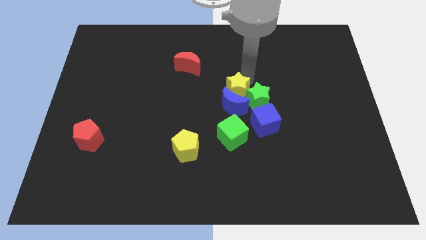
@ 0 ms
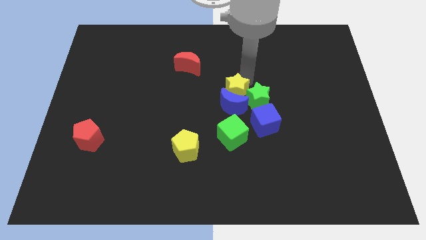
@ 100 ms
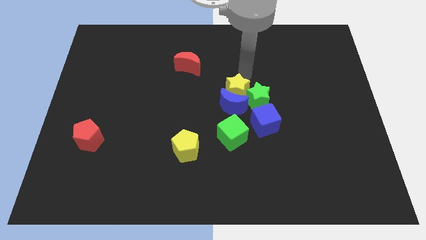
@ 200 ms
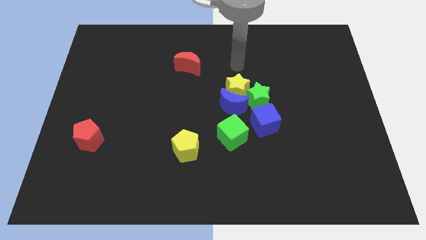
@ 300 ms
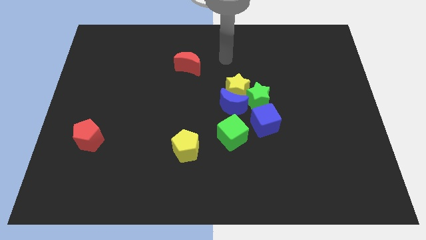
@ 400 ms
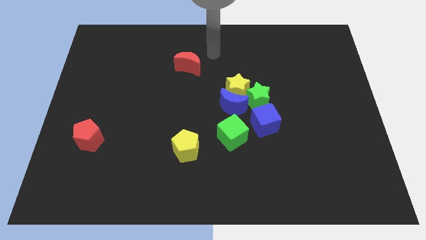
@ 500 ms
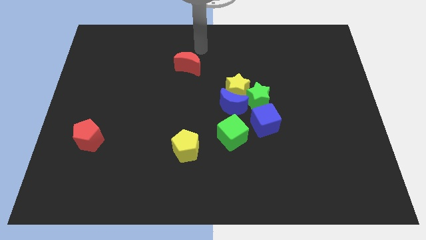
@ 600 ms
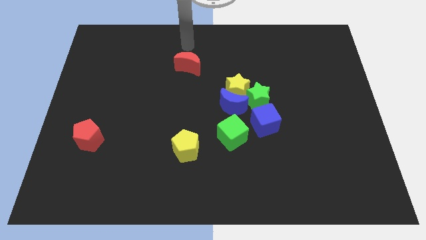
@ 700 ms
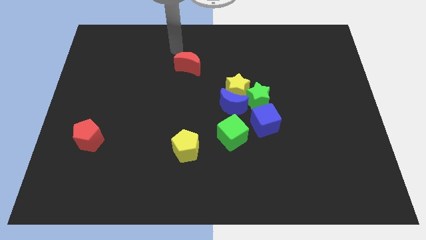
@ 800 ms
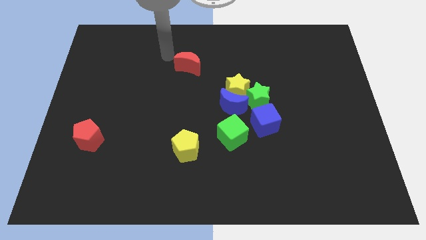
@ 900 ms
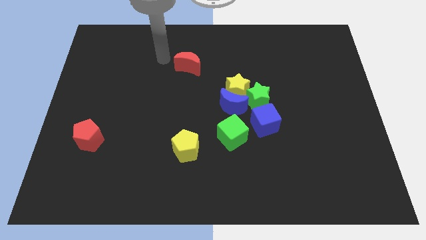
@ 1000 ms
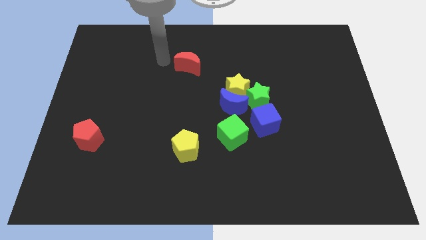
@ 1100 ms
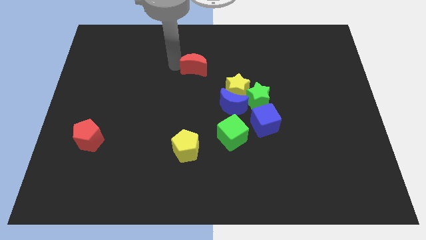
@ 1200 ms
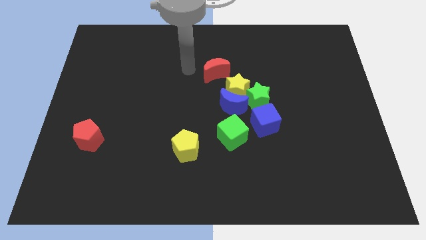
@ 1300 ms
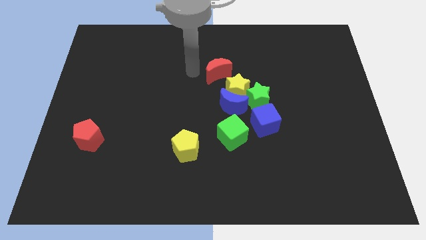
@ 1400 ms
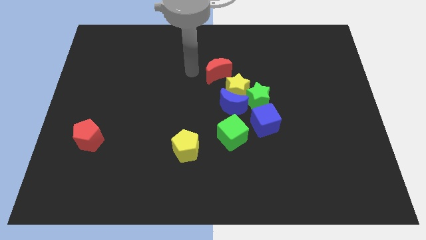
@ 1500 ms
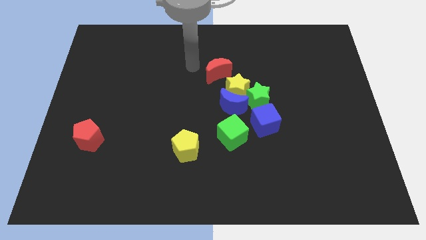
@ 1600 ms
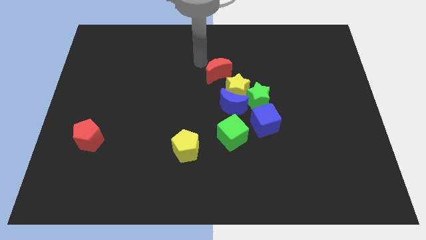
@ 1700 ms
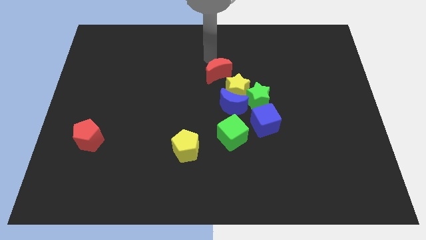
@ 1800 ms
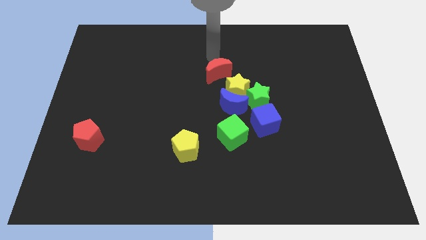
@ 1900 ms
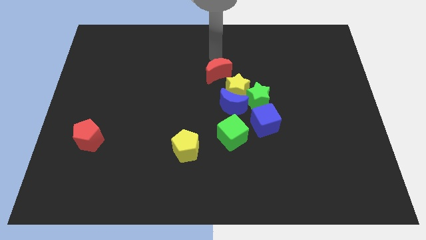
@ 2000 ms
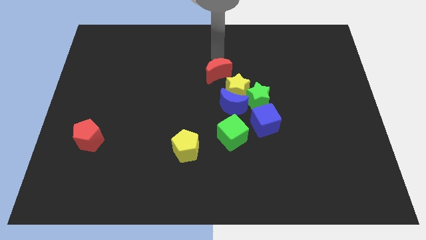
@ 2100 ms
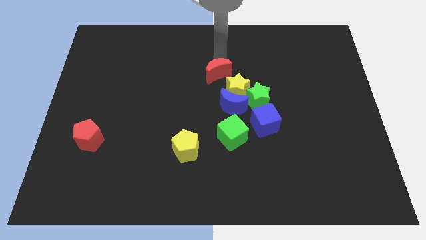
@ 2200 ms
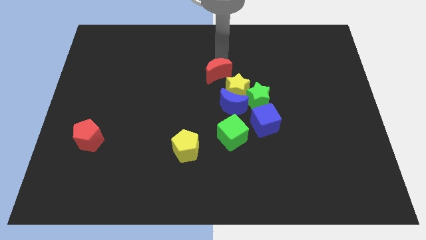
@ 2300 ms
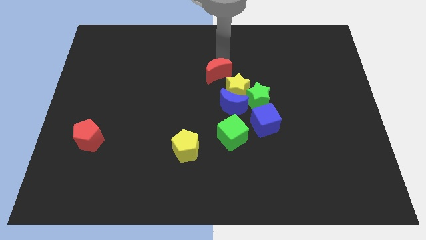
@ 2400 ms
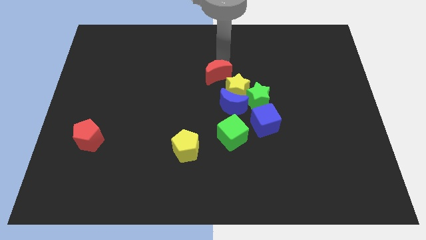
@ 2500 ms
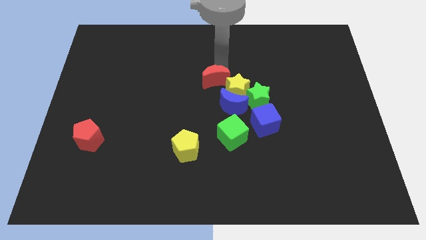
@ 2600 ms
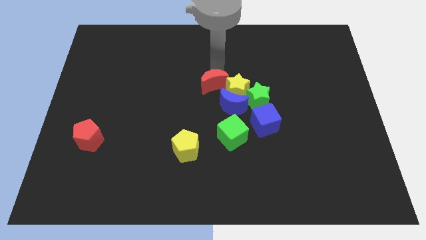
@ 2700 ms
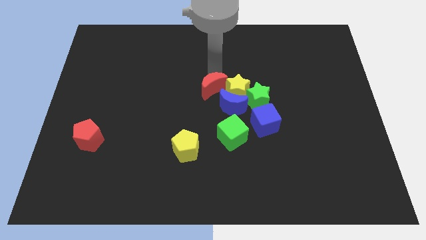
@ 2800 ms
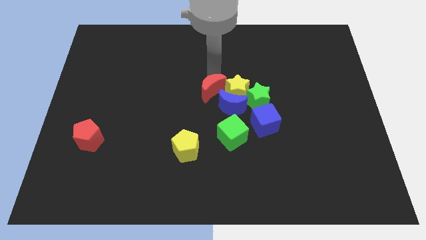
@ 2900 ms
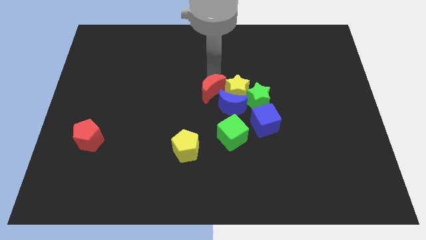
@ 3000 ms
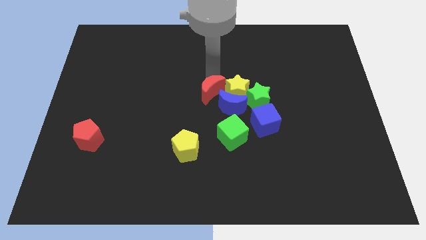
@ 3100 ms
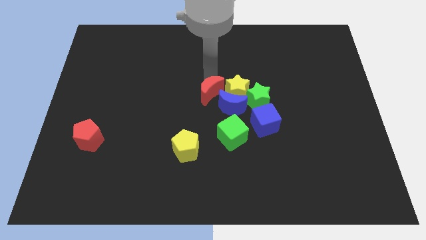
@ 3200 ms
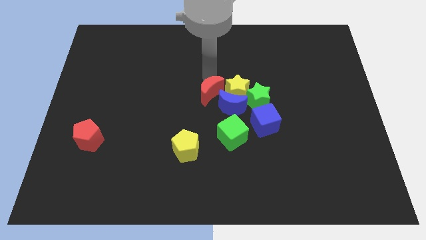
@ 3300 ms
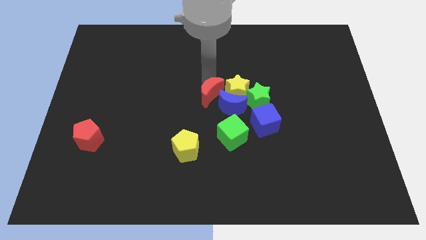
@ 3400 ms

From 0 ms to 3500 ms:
move red crescent towards the yellow star and blue crescent

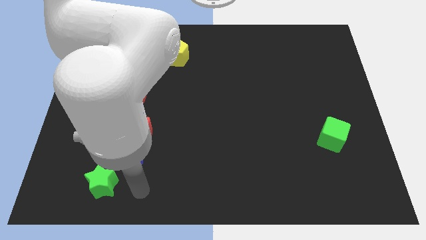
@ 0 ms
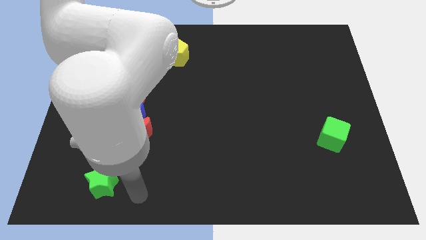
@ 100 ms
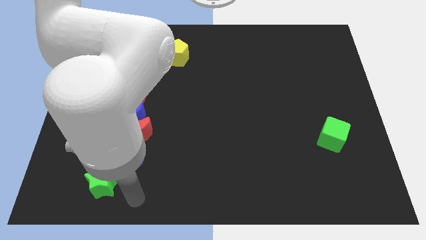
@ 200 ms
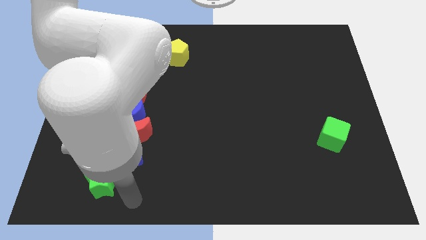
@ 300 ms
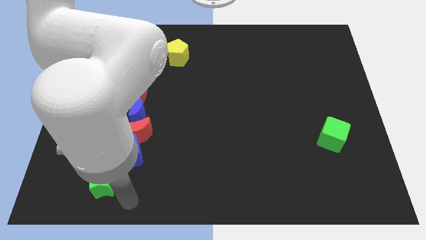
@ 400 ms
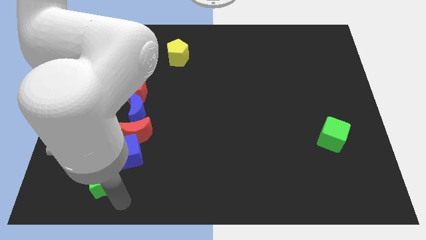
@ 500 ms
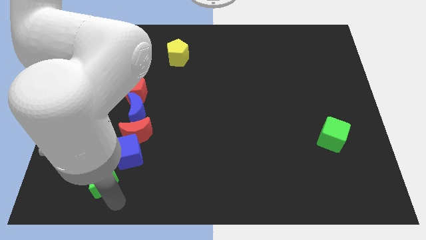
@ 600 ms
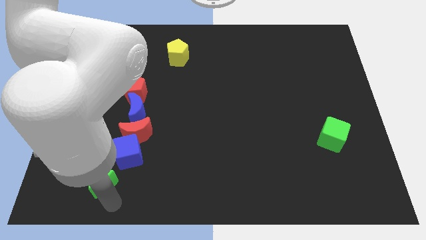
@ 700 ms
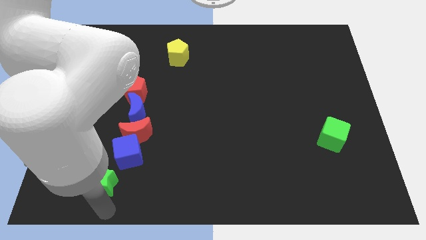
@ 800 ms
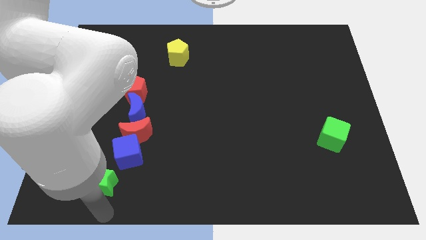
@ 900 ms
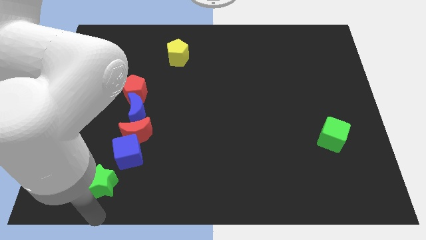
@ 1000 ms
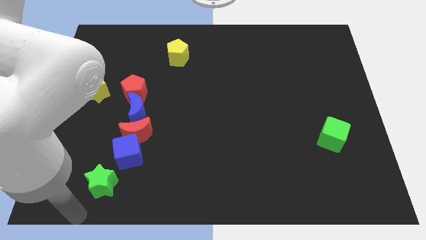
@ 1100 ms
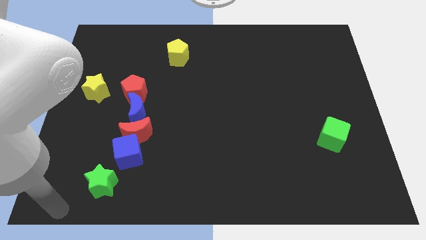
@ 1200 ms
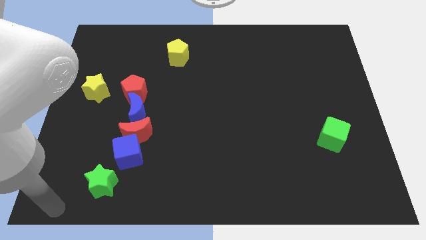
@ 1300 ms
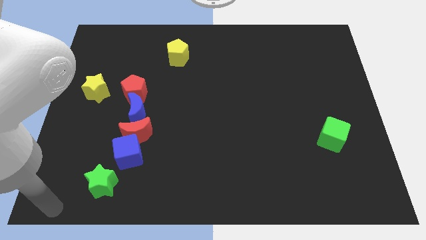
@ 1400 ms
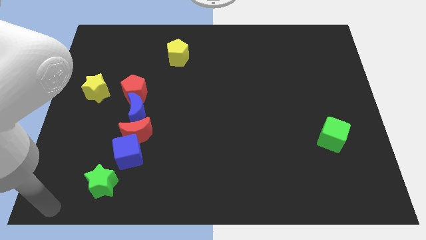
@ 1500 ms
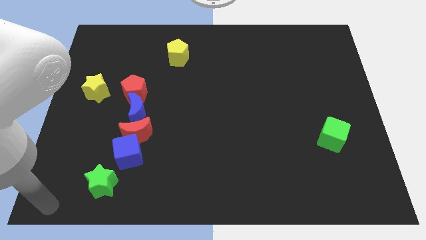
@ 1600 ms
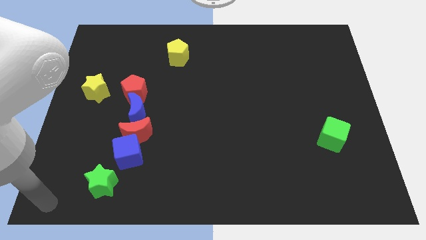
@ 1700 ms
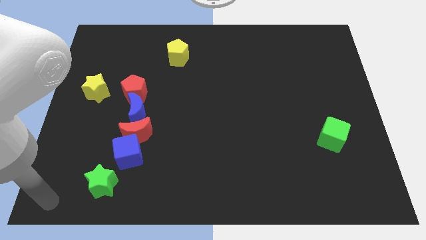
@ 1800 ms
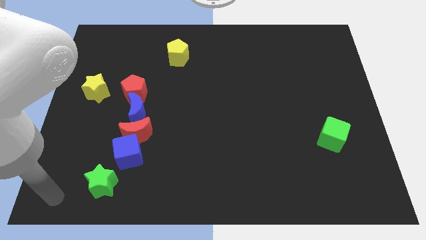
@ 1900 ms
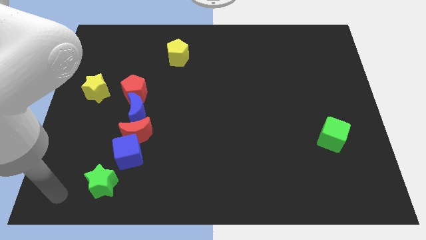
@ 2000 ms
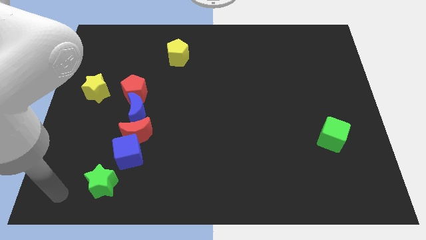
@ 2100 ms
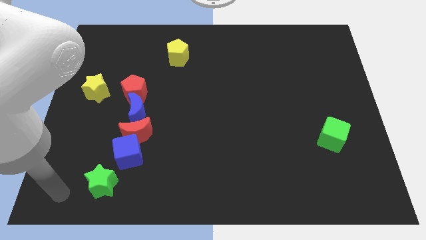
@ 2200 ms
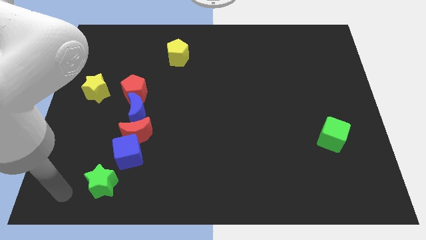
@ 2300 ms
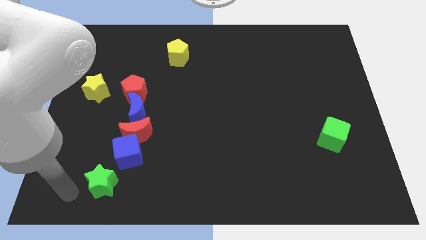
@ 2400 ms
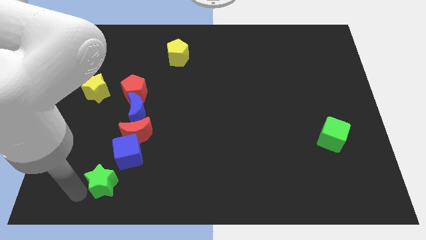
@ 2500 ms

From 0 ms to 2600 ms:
move your arm close to the bottom left side of the green star

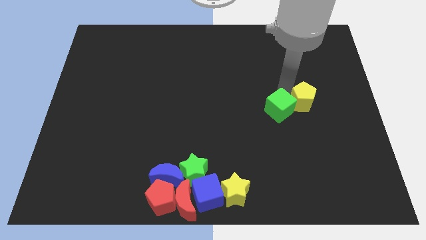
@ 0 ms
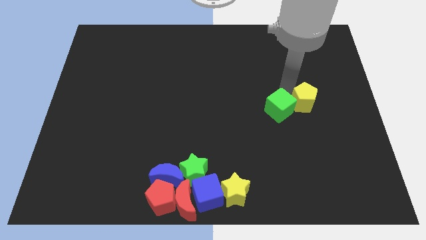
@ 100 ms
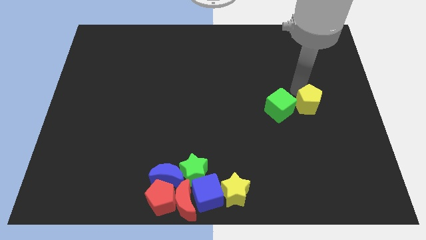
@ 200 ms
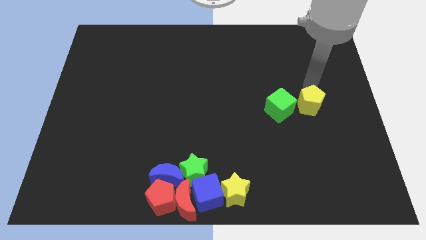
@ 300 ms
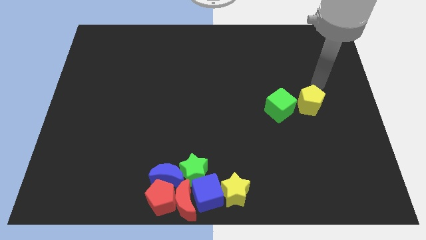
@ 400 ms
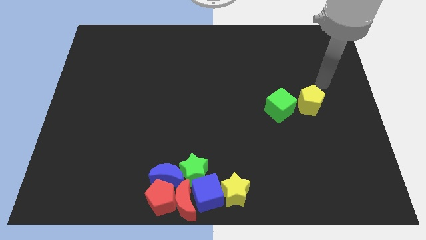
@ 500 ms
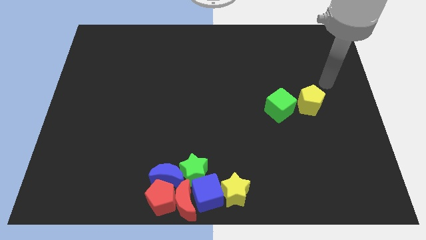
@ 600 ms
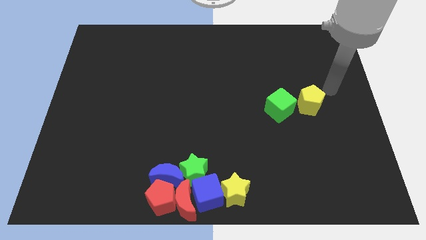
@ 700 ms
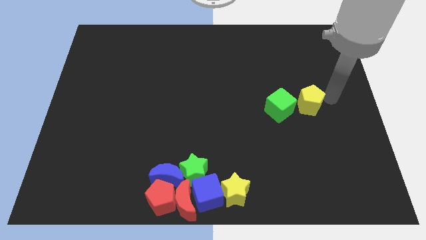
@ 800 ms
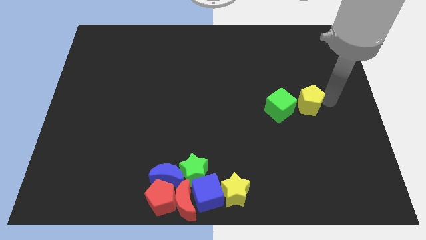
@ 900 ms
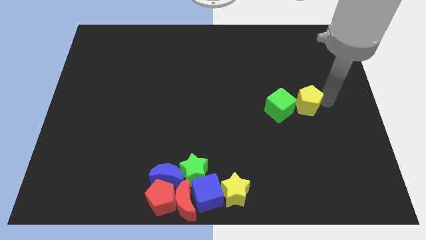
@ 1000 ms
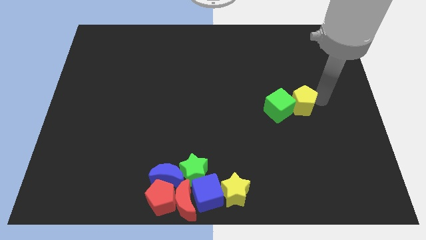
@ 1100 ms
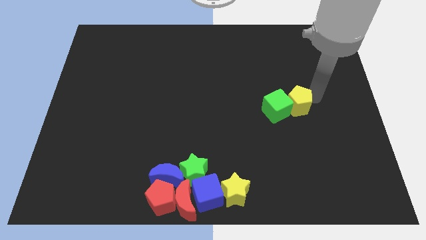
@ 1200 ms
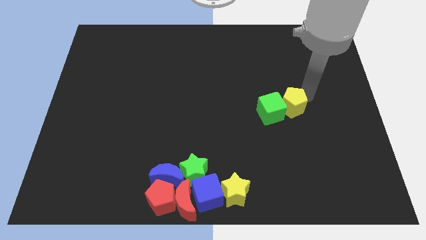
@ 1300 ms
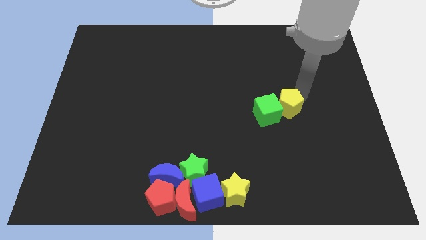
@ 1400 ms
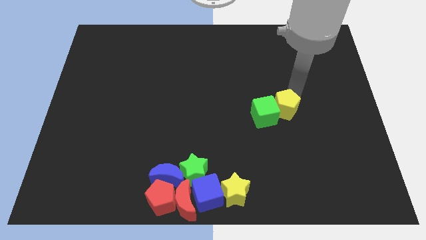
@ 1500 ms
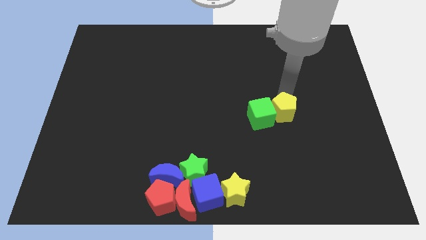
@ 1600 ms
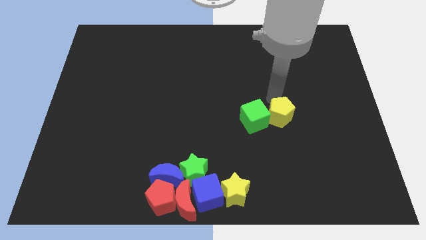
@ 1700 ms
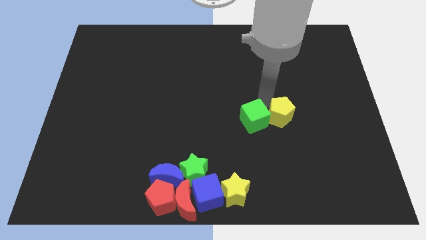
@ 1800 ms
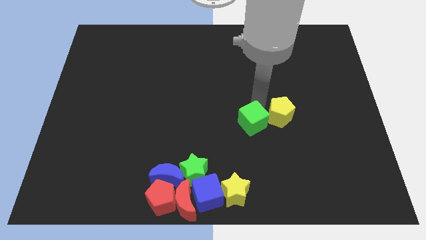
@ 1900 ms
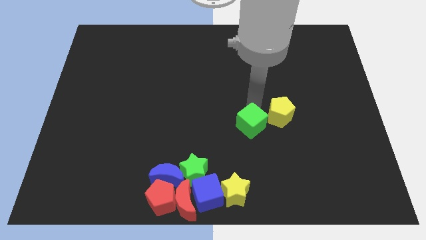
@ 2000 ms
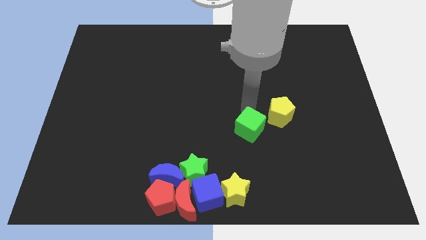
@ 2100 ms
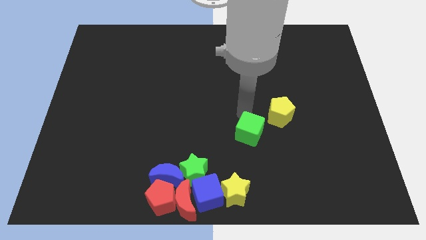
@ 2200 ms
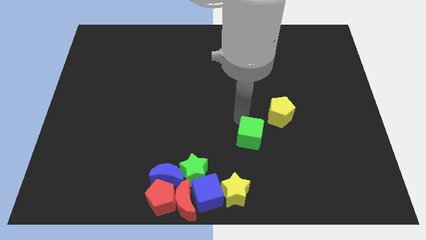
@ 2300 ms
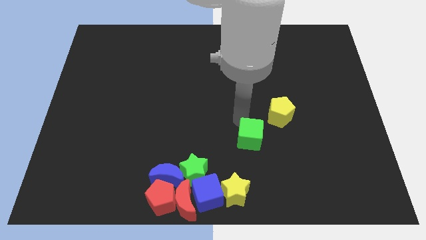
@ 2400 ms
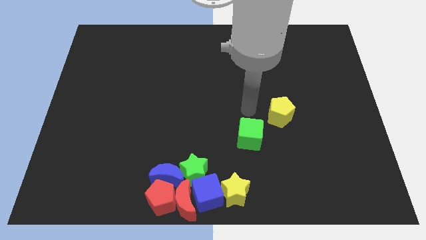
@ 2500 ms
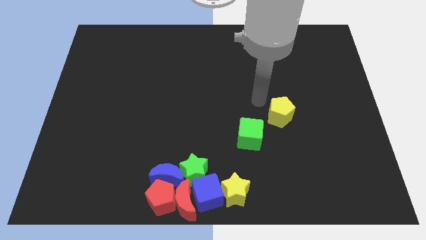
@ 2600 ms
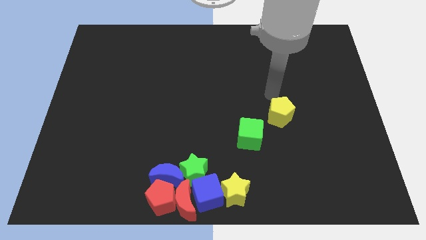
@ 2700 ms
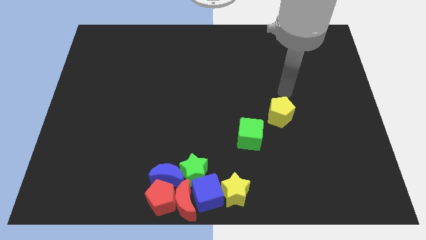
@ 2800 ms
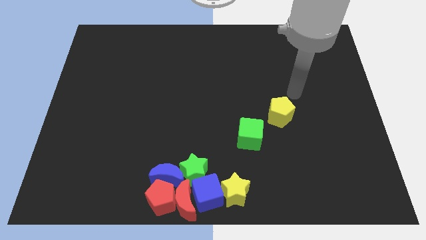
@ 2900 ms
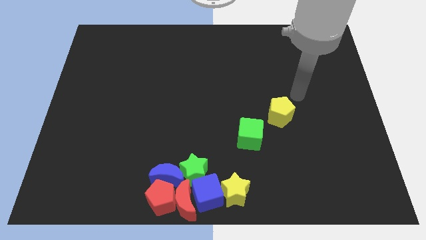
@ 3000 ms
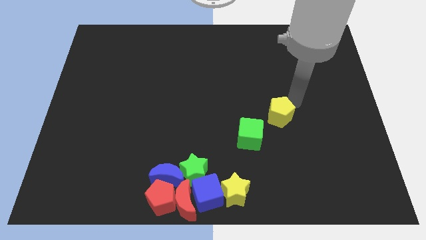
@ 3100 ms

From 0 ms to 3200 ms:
separate green cube and the yellow pentagon
